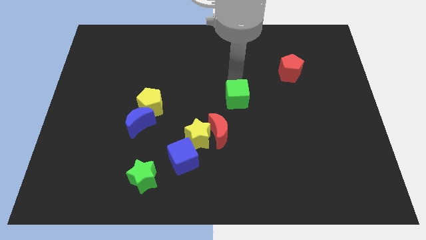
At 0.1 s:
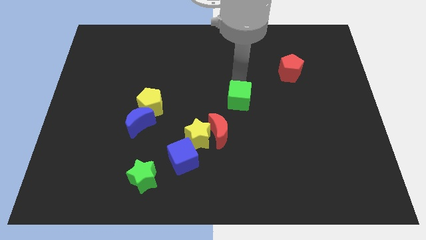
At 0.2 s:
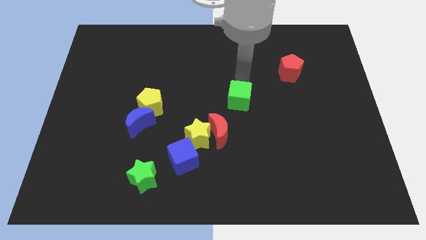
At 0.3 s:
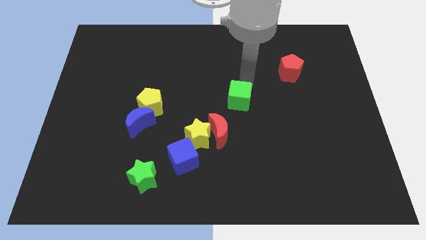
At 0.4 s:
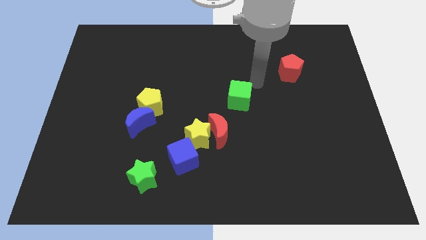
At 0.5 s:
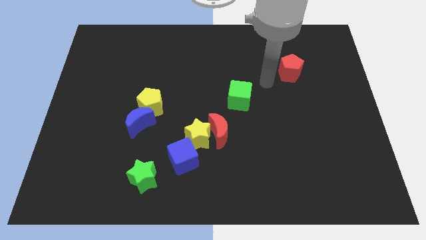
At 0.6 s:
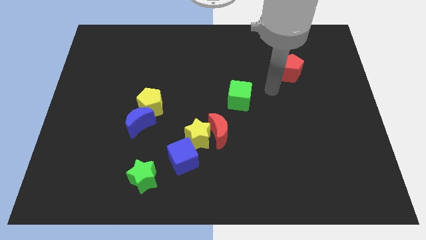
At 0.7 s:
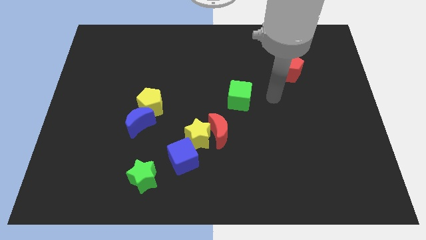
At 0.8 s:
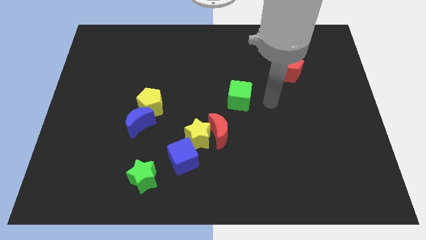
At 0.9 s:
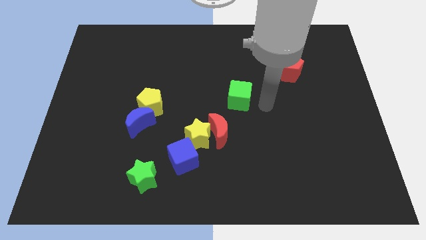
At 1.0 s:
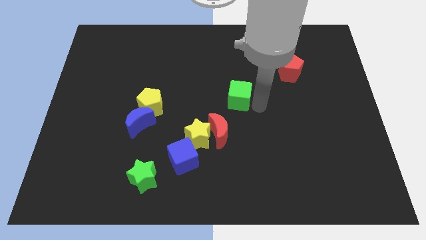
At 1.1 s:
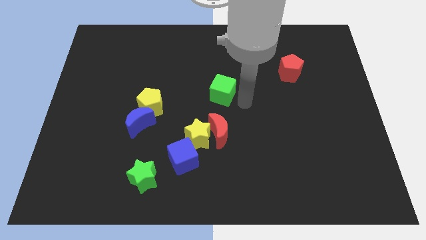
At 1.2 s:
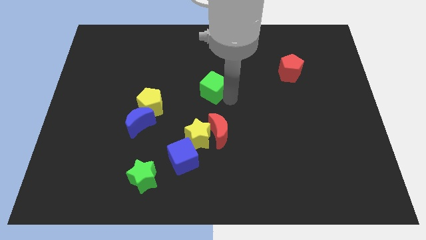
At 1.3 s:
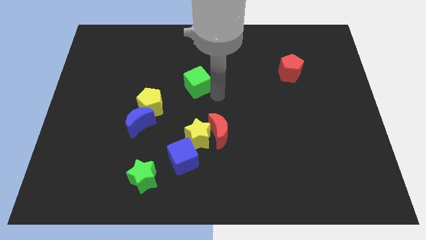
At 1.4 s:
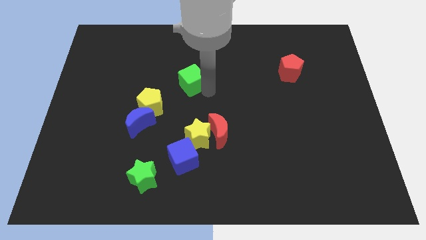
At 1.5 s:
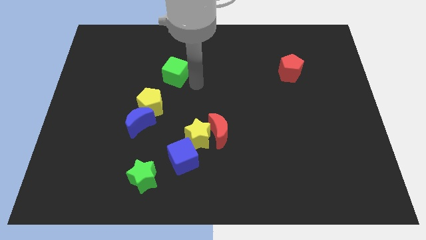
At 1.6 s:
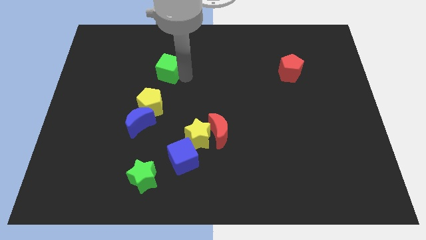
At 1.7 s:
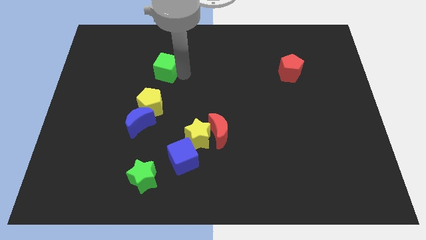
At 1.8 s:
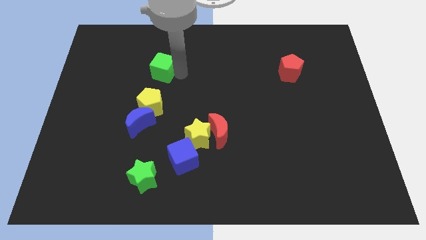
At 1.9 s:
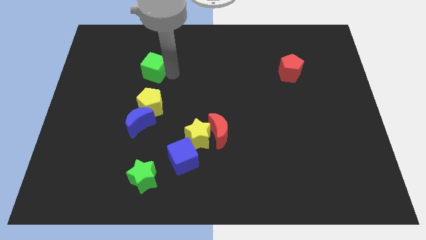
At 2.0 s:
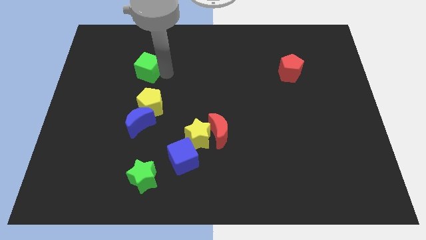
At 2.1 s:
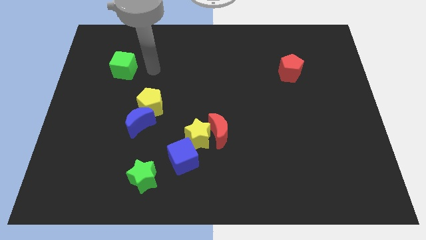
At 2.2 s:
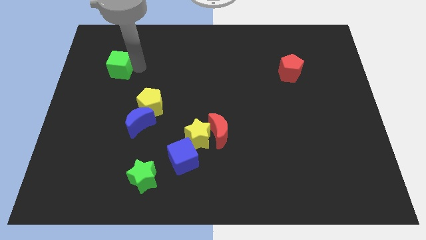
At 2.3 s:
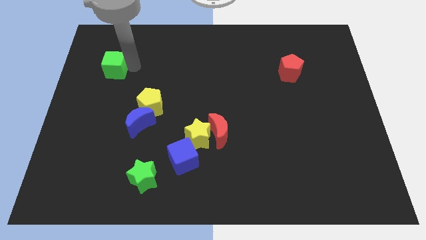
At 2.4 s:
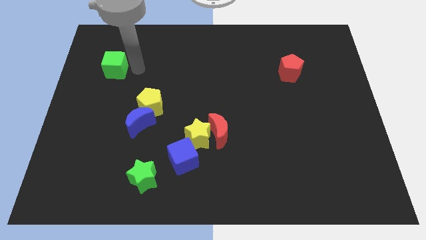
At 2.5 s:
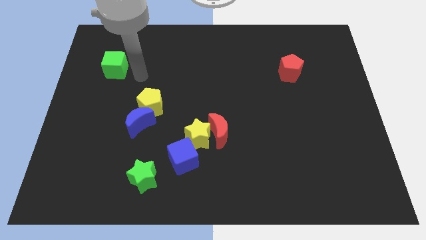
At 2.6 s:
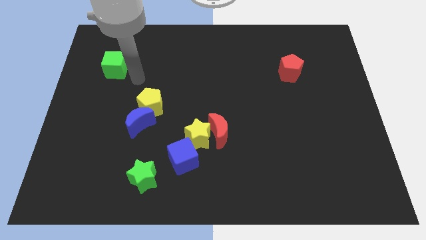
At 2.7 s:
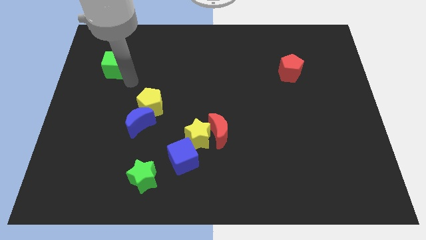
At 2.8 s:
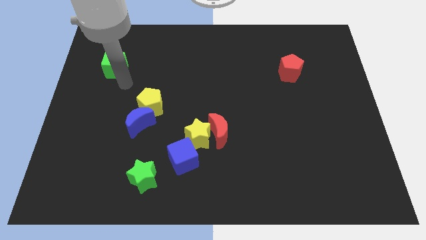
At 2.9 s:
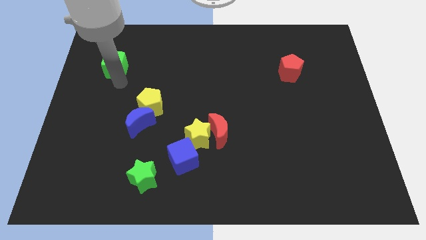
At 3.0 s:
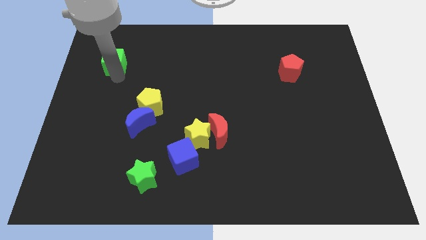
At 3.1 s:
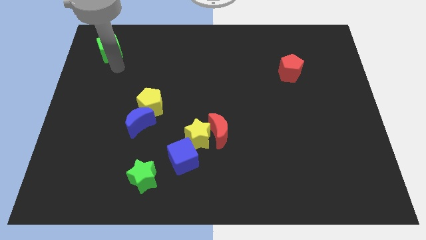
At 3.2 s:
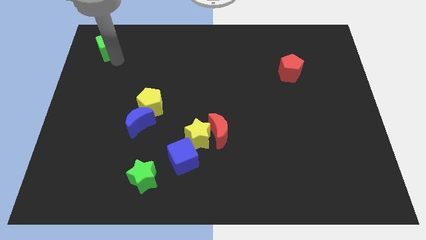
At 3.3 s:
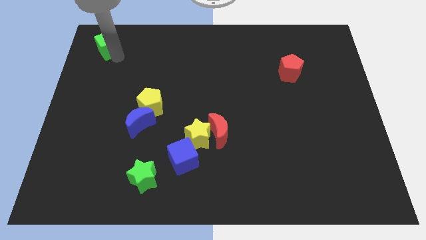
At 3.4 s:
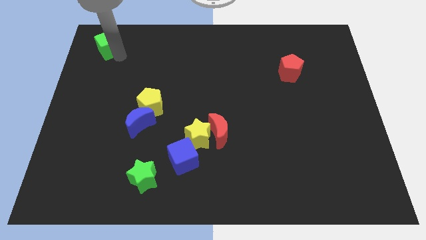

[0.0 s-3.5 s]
slide the green cube towards the top left

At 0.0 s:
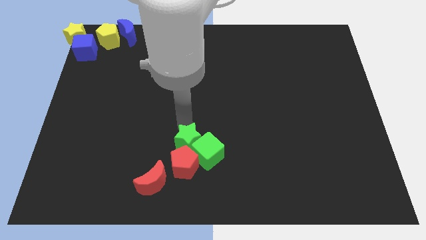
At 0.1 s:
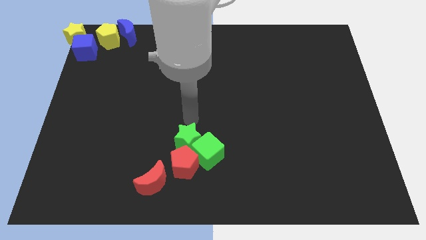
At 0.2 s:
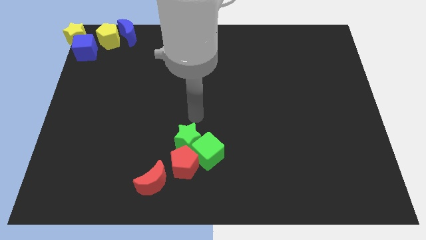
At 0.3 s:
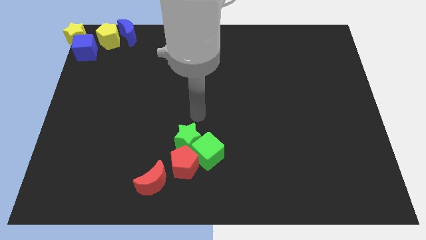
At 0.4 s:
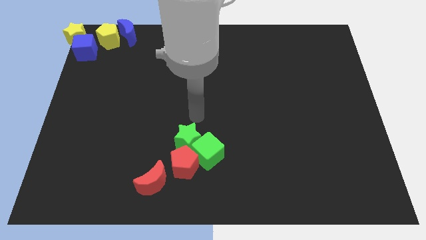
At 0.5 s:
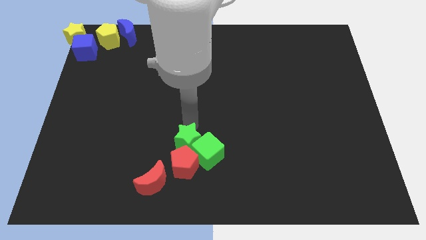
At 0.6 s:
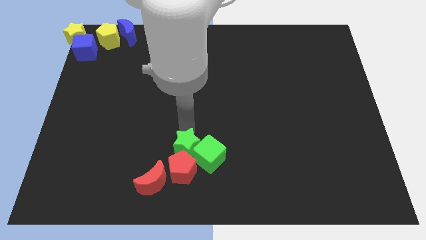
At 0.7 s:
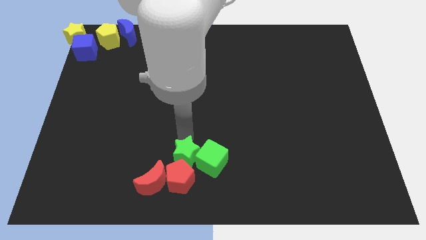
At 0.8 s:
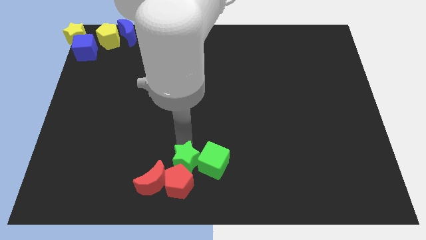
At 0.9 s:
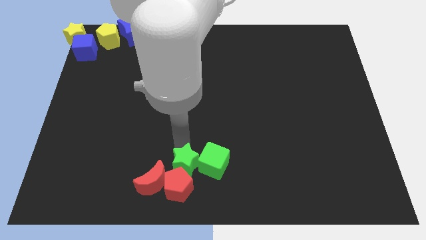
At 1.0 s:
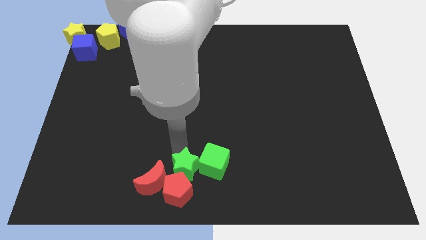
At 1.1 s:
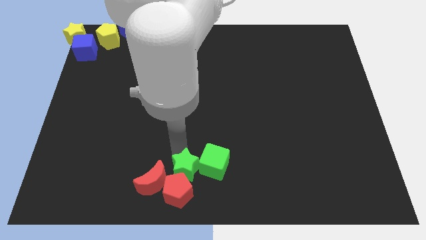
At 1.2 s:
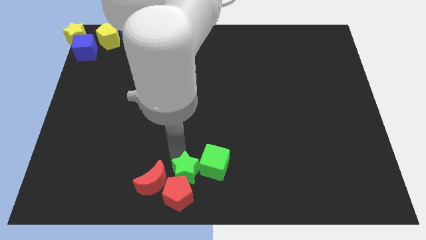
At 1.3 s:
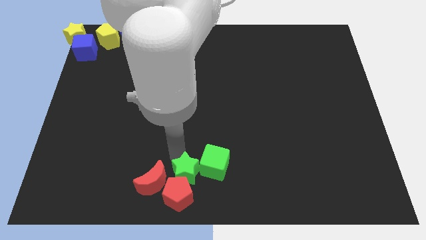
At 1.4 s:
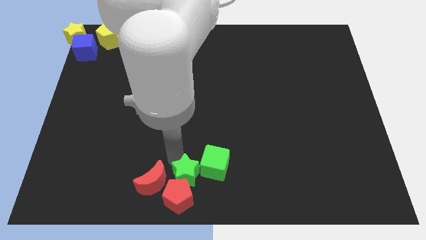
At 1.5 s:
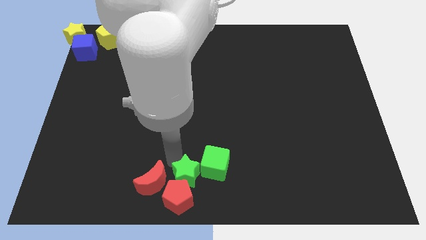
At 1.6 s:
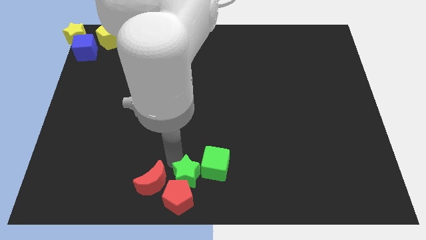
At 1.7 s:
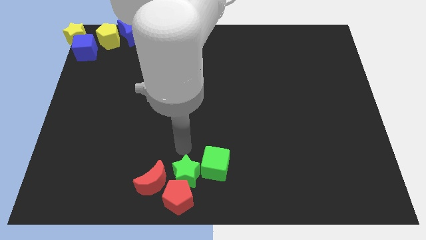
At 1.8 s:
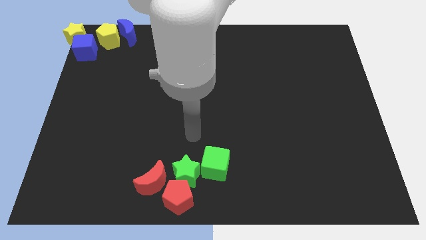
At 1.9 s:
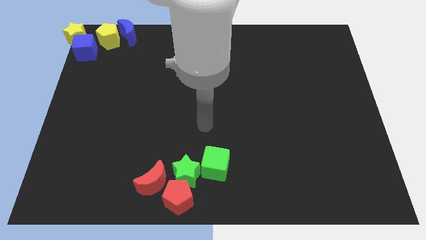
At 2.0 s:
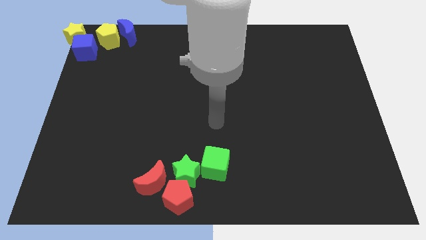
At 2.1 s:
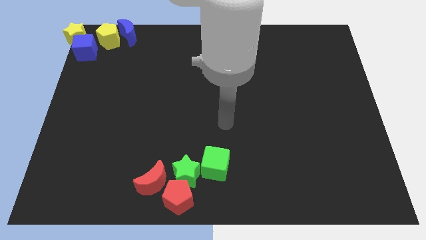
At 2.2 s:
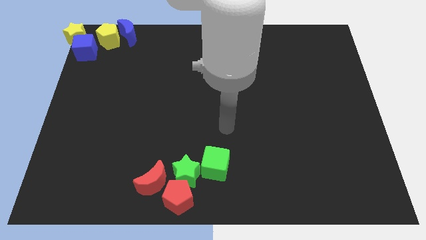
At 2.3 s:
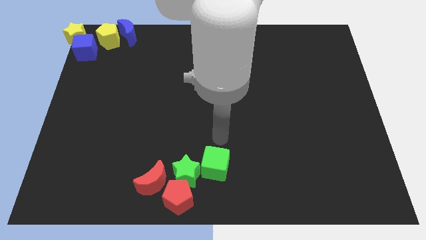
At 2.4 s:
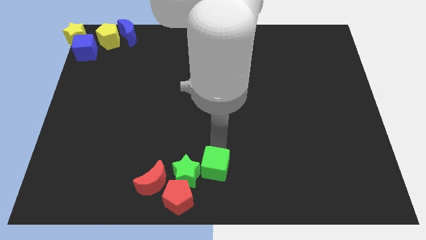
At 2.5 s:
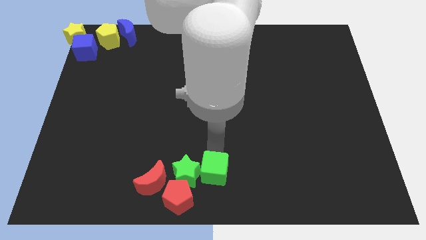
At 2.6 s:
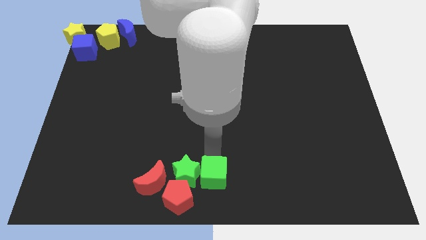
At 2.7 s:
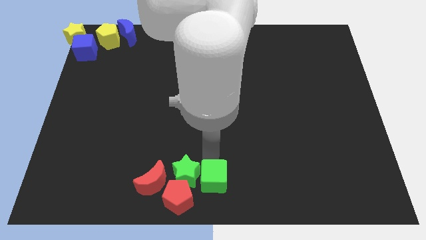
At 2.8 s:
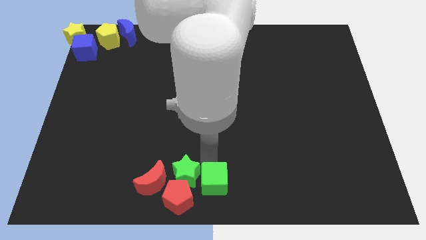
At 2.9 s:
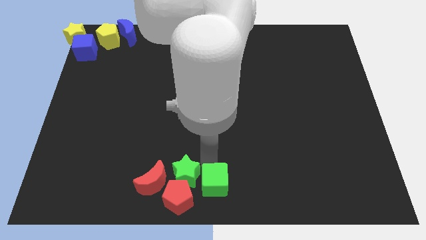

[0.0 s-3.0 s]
push green star slightly towards down

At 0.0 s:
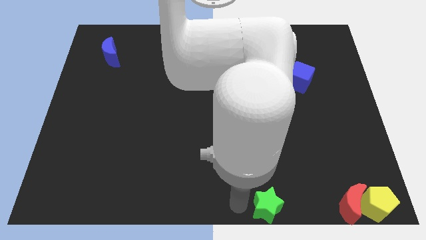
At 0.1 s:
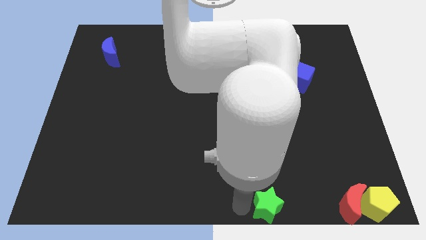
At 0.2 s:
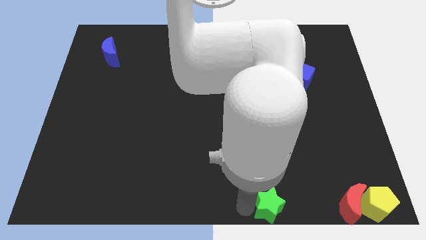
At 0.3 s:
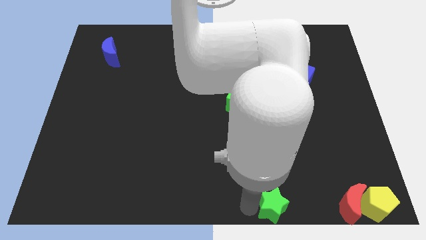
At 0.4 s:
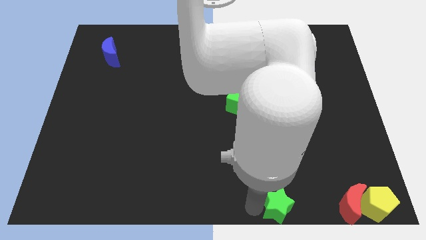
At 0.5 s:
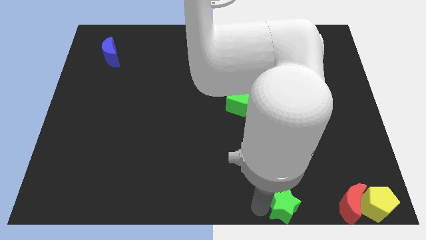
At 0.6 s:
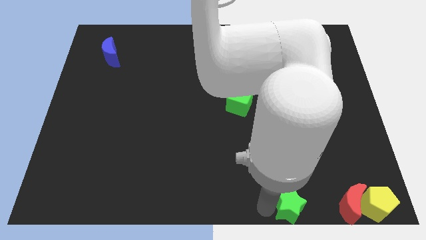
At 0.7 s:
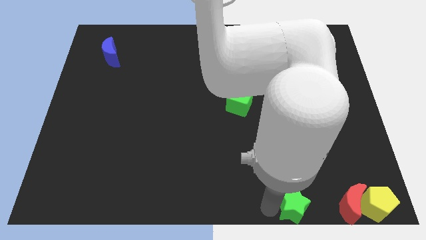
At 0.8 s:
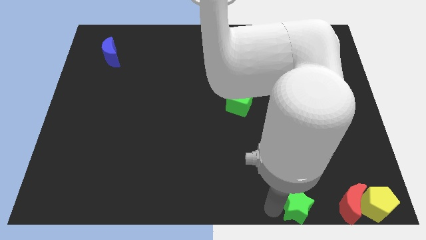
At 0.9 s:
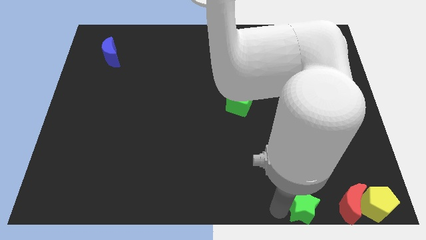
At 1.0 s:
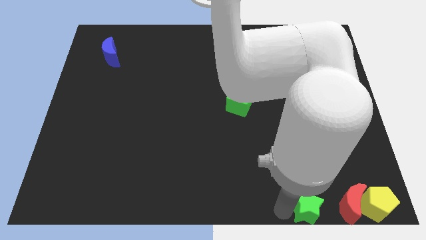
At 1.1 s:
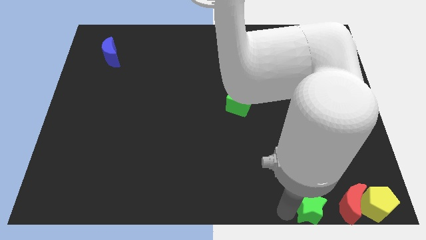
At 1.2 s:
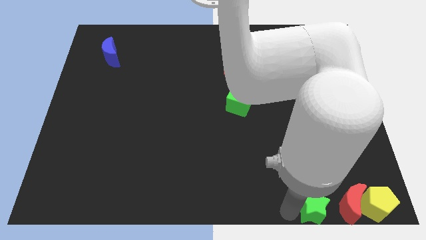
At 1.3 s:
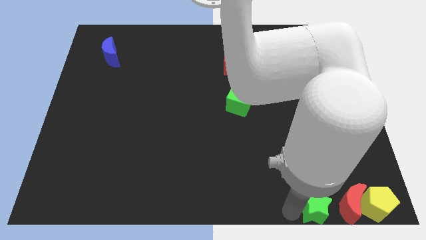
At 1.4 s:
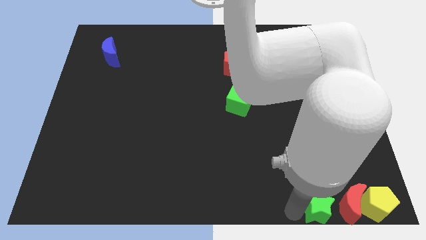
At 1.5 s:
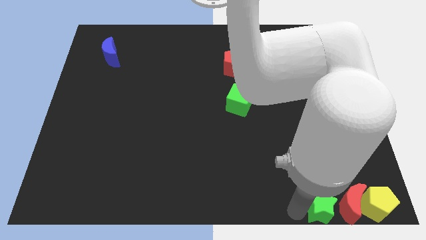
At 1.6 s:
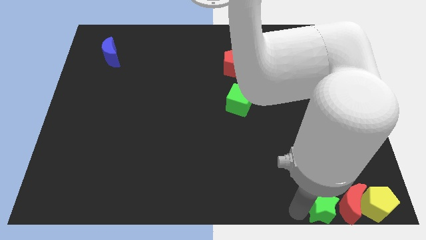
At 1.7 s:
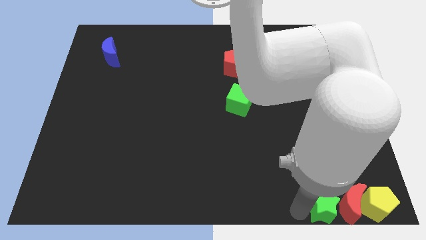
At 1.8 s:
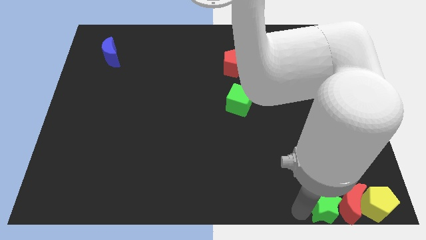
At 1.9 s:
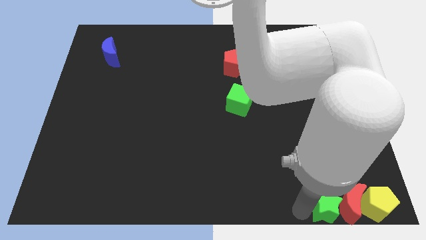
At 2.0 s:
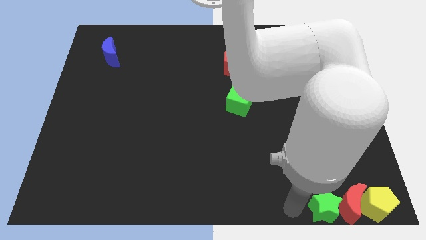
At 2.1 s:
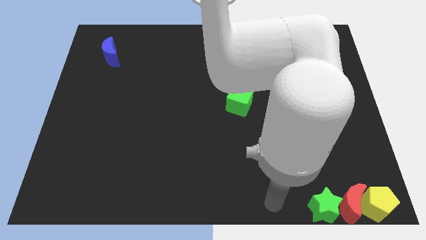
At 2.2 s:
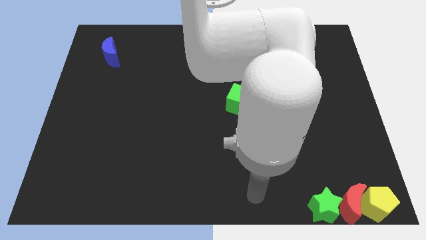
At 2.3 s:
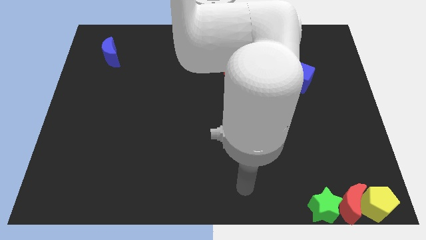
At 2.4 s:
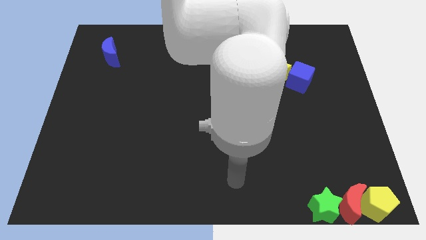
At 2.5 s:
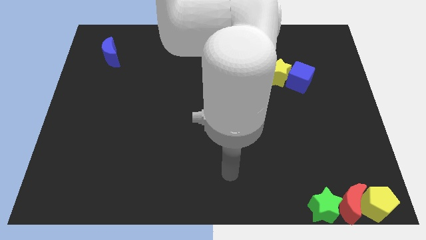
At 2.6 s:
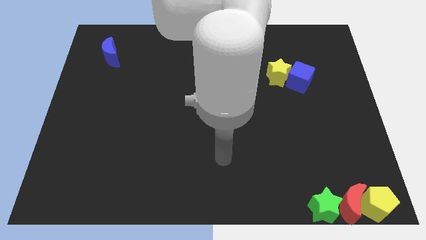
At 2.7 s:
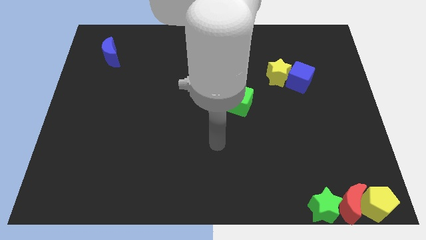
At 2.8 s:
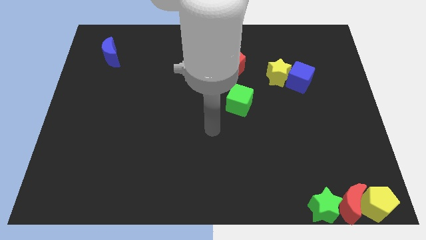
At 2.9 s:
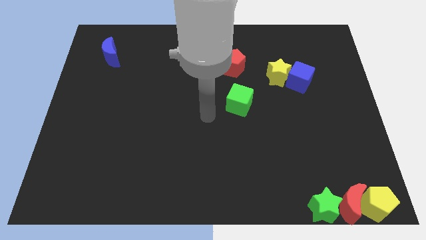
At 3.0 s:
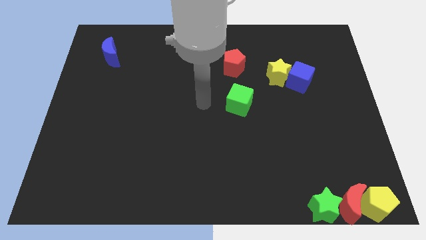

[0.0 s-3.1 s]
place the green star close to the red crescent
